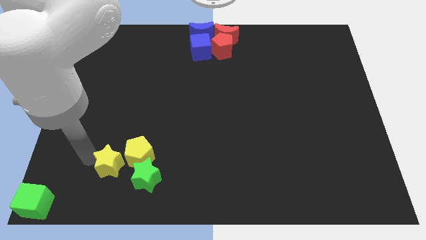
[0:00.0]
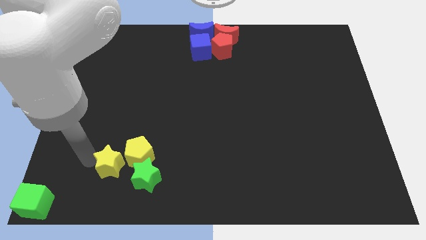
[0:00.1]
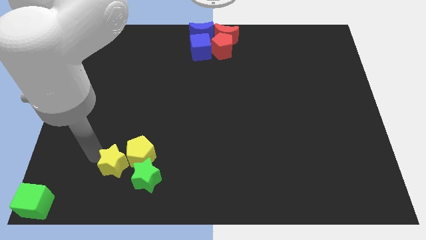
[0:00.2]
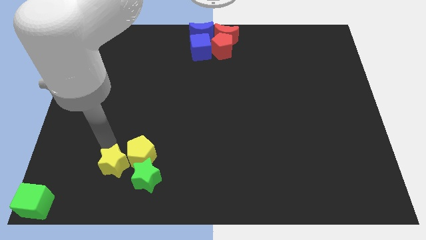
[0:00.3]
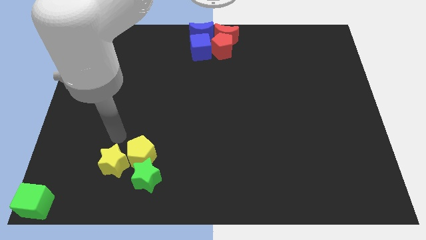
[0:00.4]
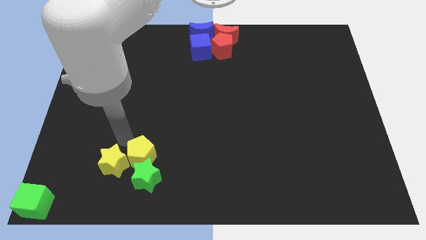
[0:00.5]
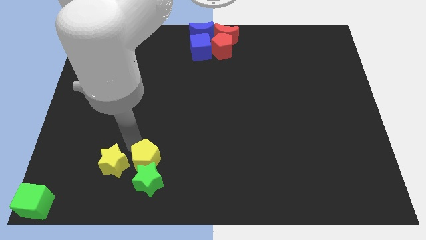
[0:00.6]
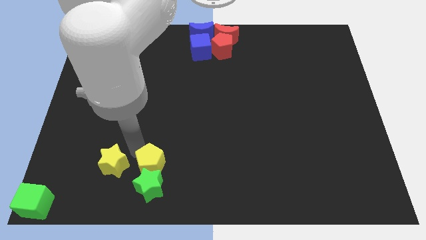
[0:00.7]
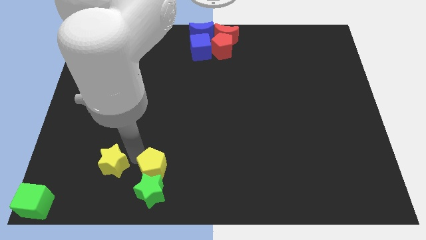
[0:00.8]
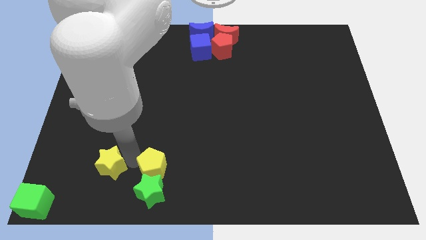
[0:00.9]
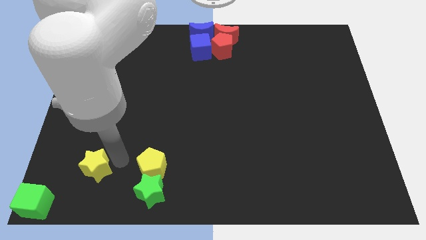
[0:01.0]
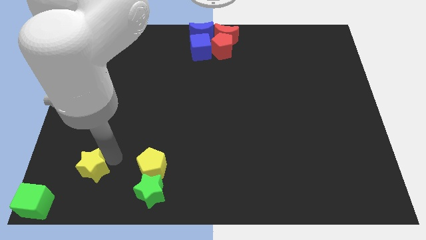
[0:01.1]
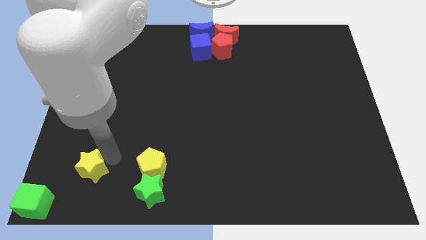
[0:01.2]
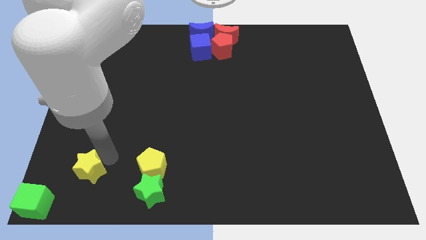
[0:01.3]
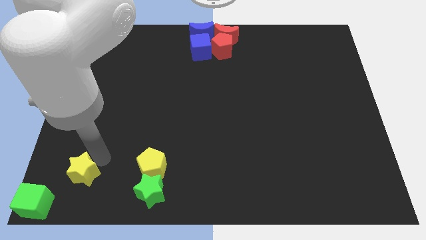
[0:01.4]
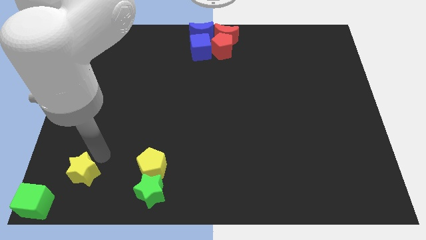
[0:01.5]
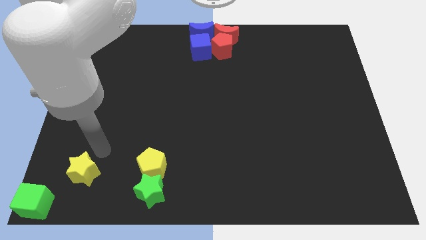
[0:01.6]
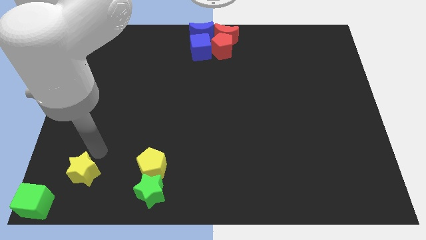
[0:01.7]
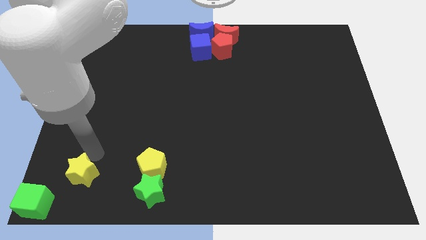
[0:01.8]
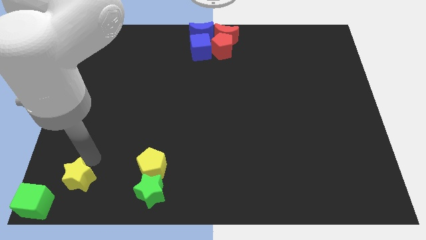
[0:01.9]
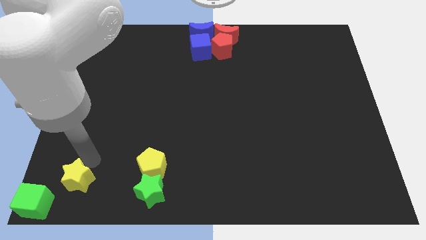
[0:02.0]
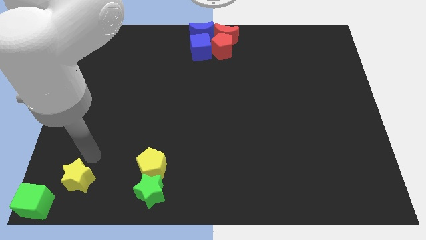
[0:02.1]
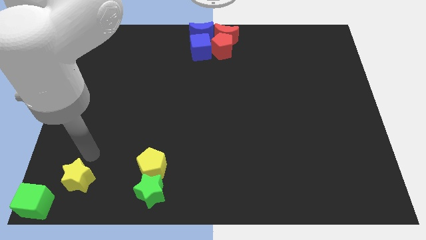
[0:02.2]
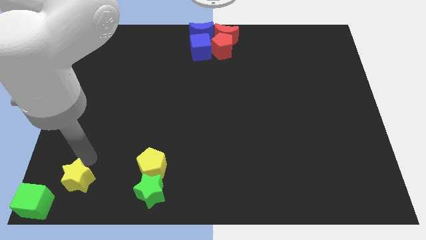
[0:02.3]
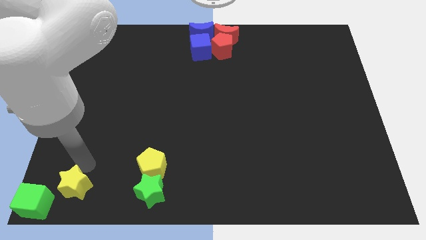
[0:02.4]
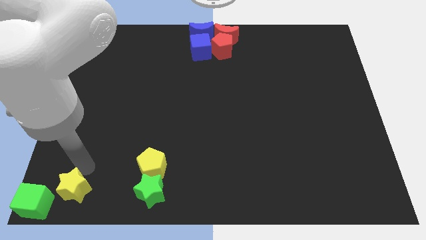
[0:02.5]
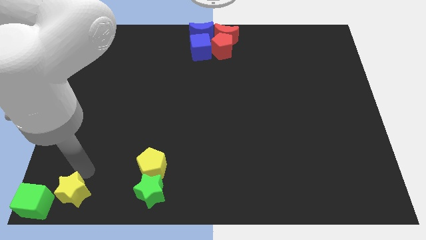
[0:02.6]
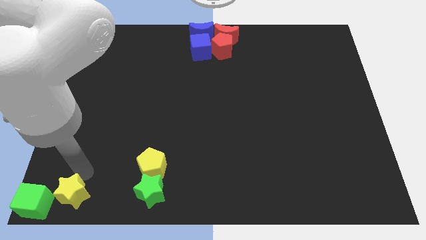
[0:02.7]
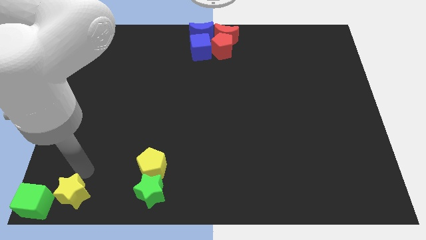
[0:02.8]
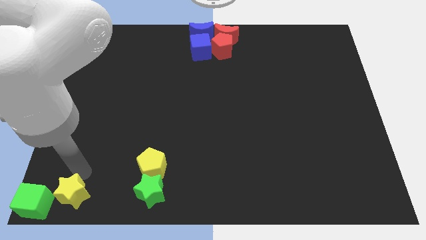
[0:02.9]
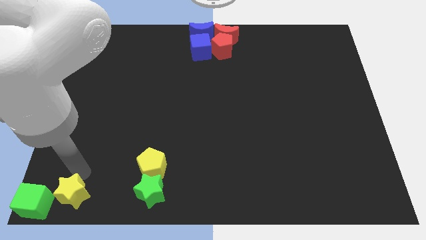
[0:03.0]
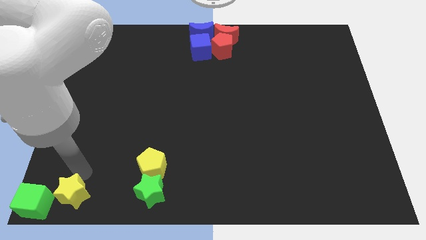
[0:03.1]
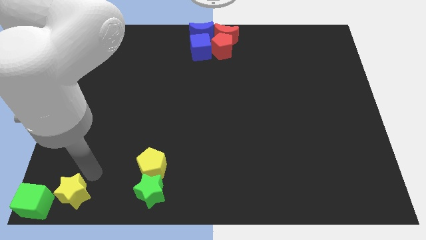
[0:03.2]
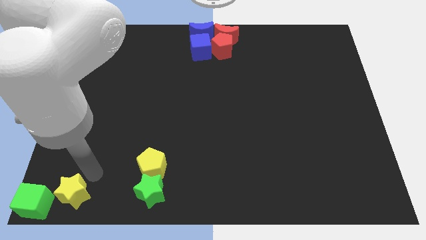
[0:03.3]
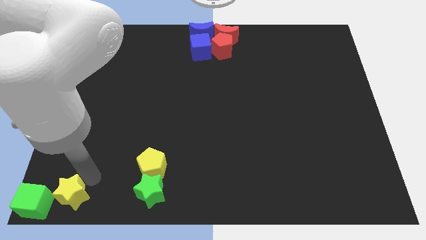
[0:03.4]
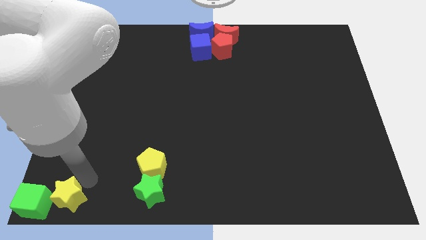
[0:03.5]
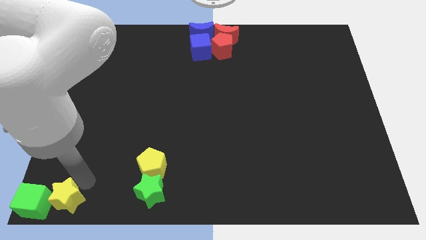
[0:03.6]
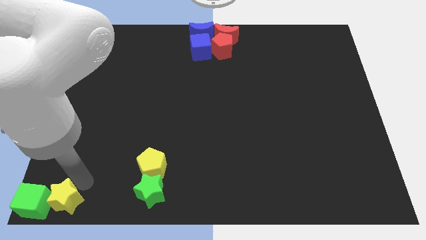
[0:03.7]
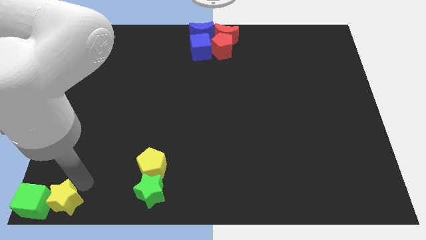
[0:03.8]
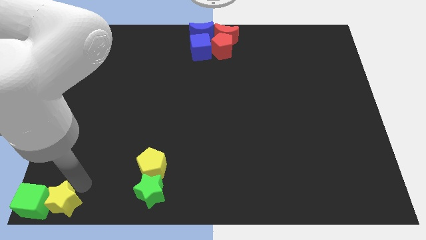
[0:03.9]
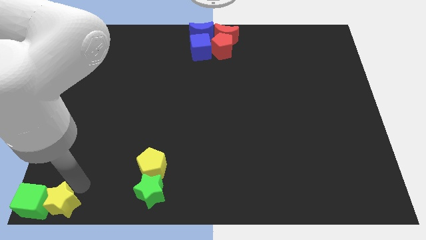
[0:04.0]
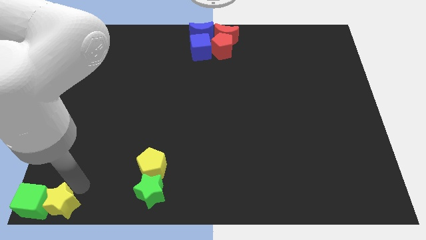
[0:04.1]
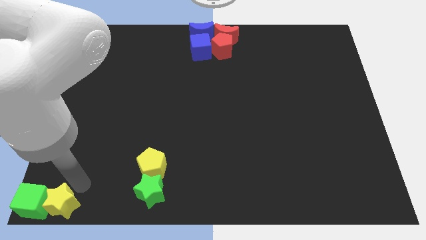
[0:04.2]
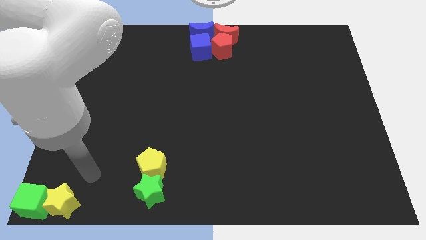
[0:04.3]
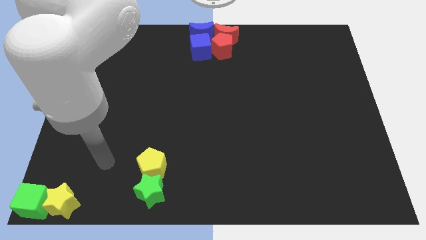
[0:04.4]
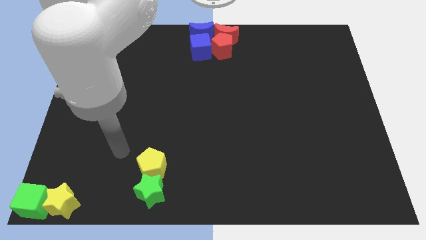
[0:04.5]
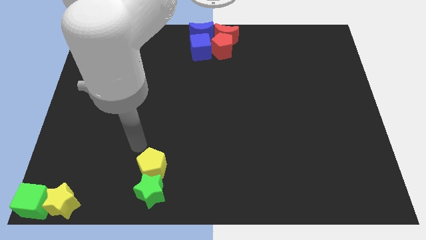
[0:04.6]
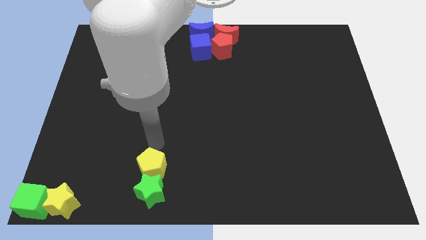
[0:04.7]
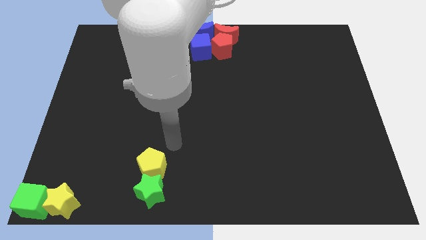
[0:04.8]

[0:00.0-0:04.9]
move the yellow star to the right of the green cube

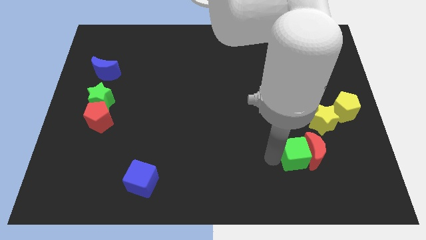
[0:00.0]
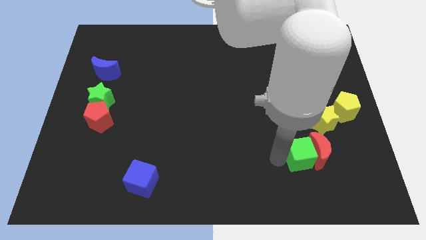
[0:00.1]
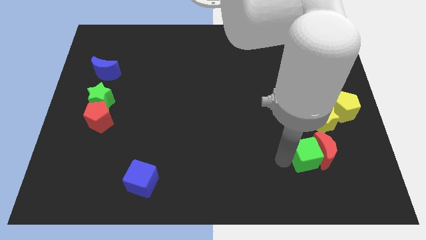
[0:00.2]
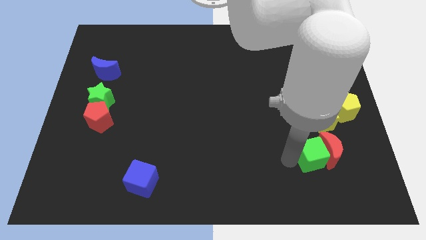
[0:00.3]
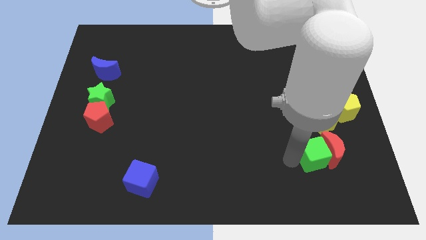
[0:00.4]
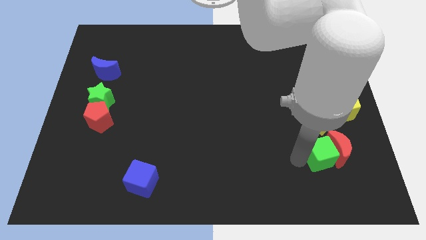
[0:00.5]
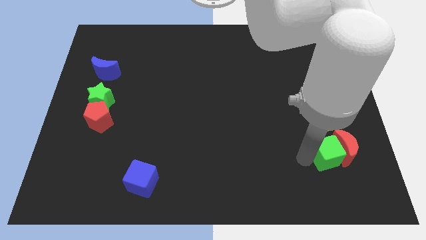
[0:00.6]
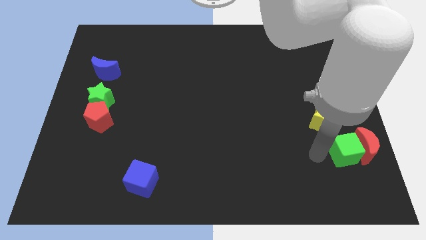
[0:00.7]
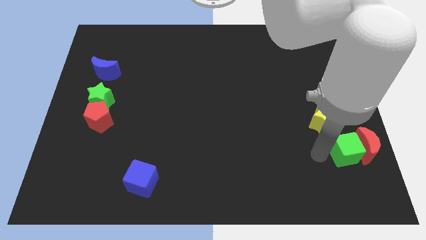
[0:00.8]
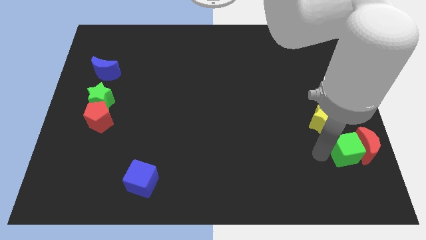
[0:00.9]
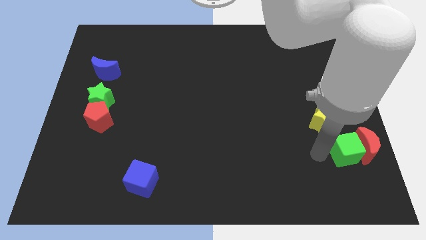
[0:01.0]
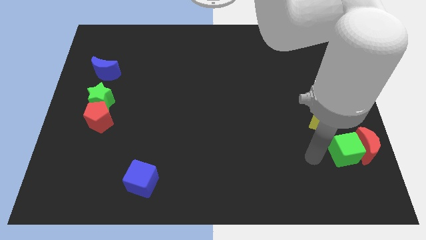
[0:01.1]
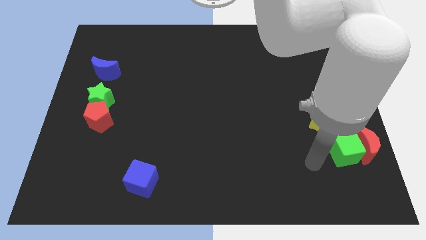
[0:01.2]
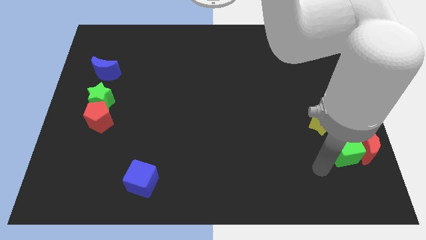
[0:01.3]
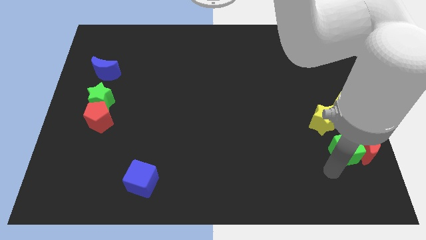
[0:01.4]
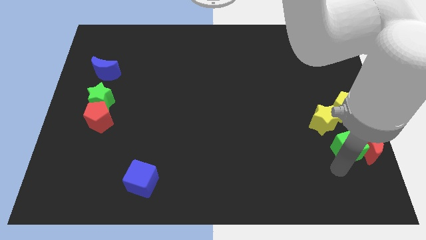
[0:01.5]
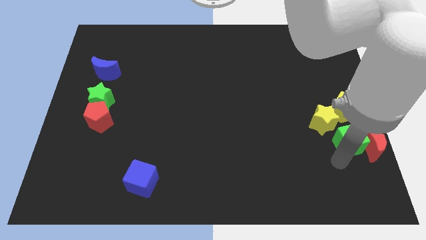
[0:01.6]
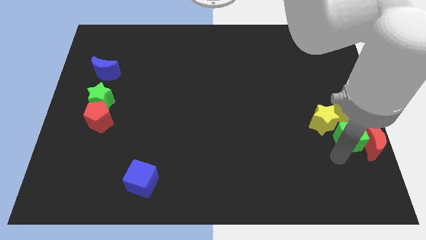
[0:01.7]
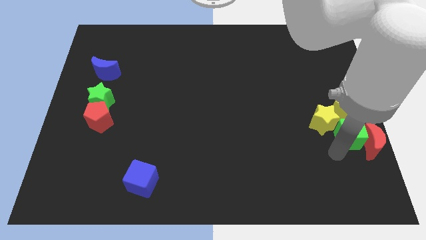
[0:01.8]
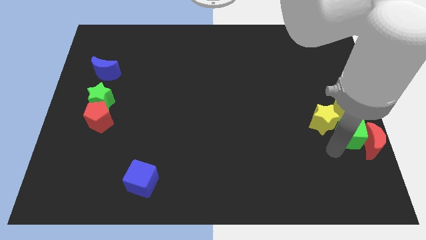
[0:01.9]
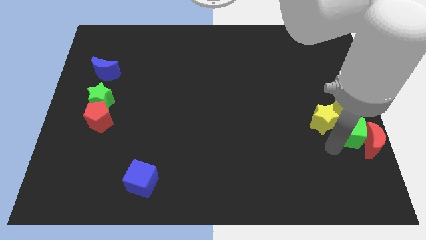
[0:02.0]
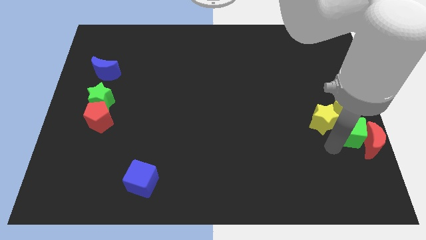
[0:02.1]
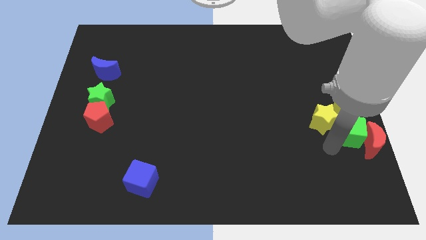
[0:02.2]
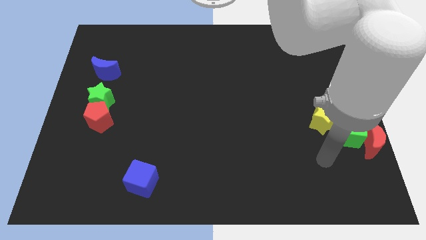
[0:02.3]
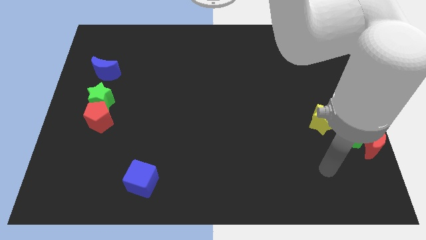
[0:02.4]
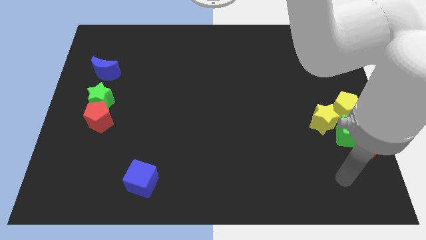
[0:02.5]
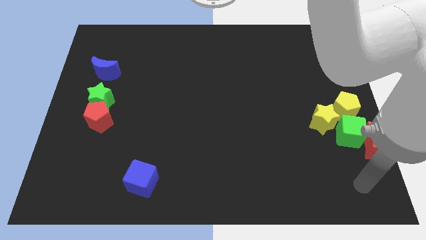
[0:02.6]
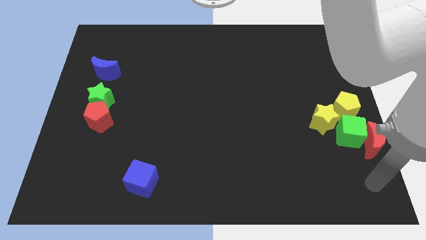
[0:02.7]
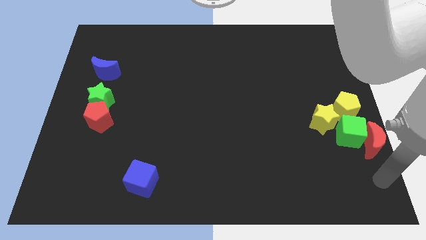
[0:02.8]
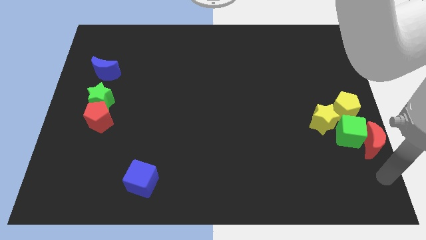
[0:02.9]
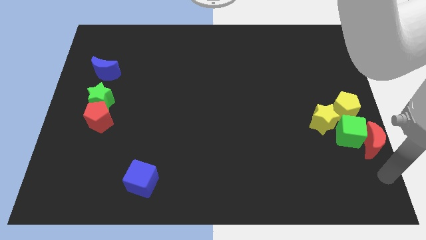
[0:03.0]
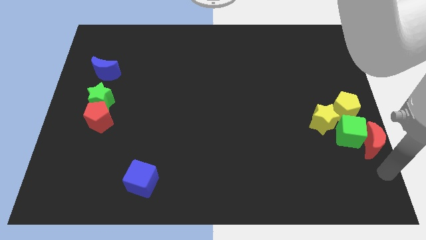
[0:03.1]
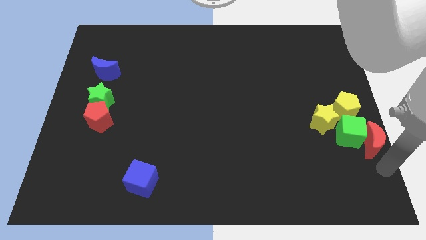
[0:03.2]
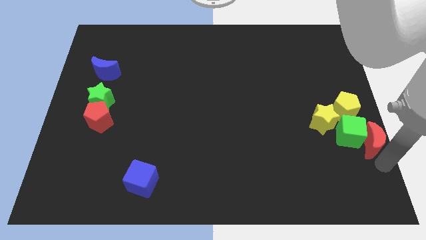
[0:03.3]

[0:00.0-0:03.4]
drag green cube and red moon towards right side of the board

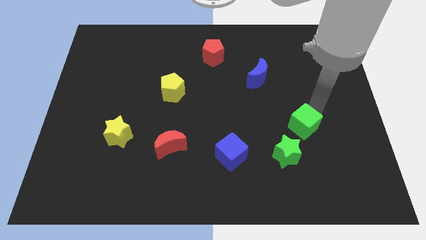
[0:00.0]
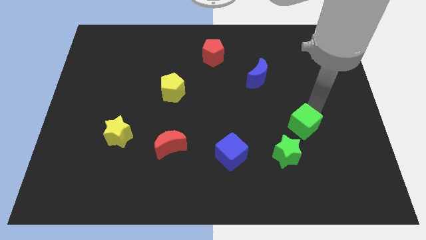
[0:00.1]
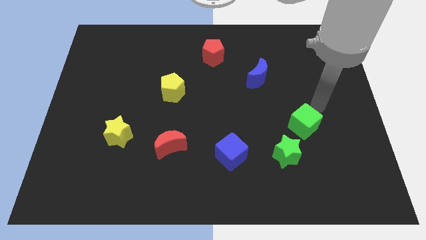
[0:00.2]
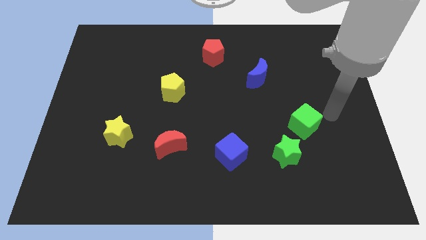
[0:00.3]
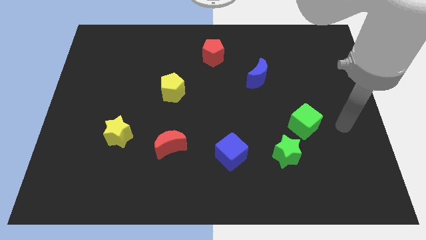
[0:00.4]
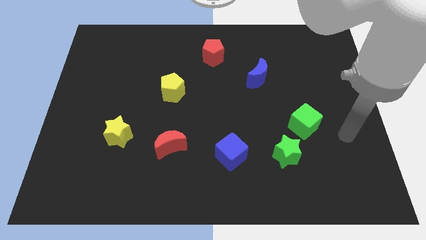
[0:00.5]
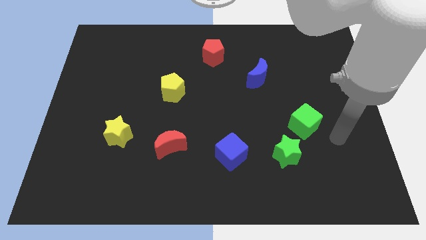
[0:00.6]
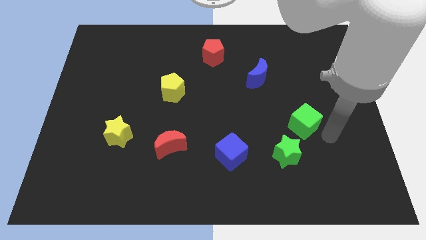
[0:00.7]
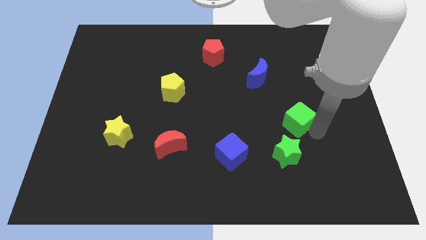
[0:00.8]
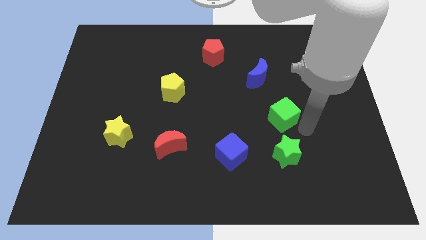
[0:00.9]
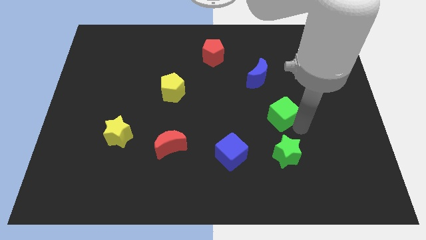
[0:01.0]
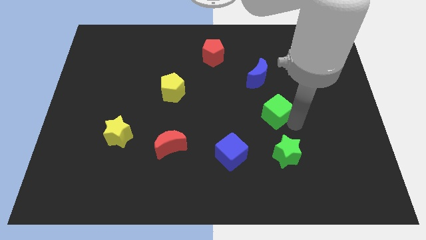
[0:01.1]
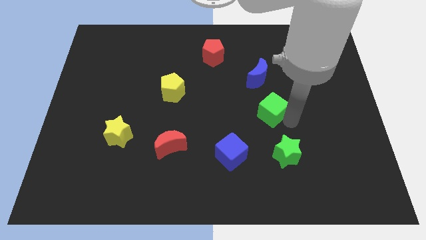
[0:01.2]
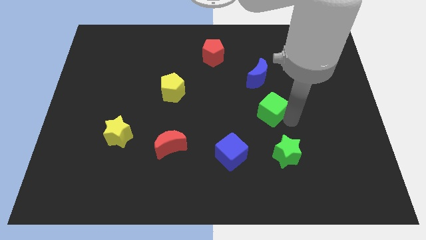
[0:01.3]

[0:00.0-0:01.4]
move the green cube above the green star
